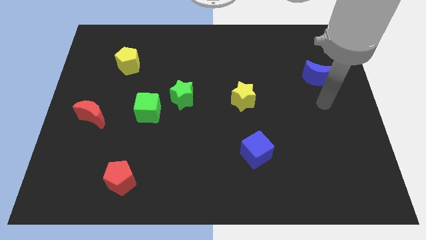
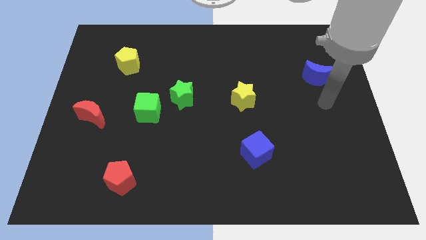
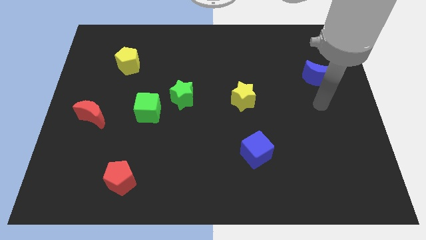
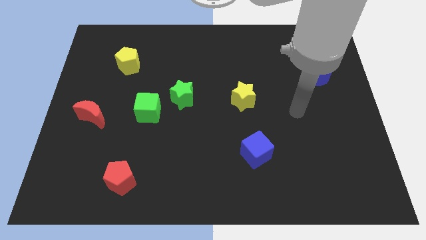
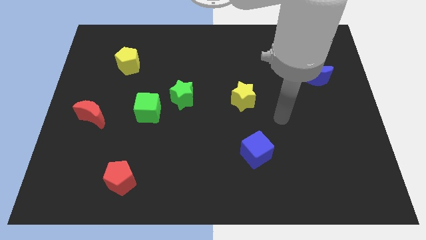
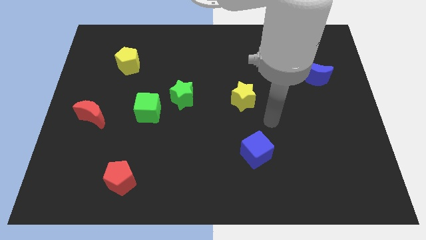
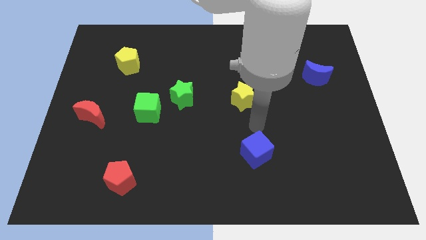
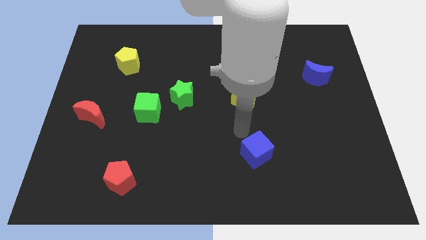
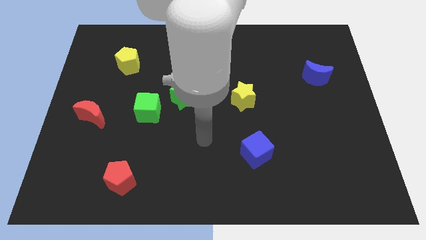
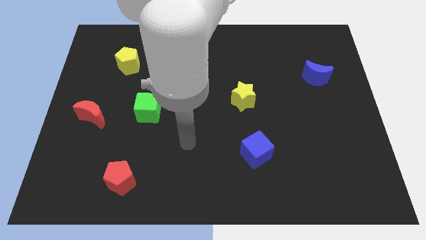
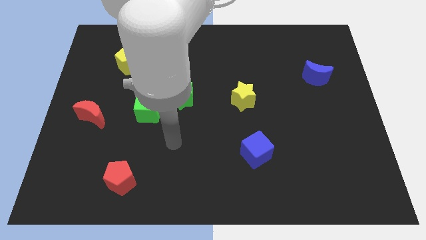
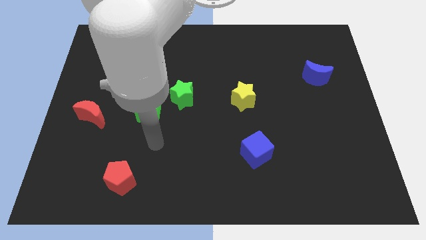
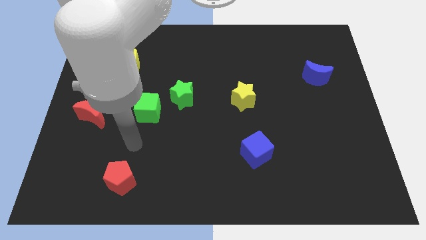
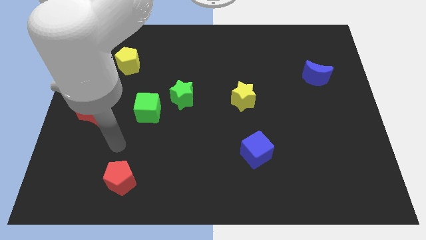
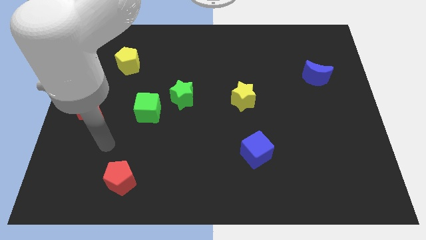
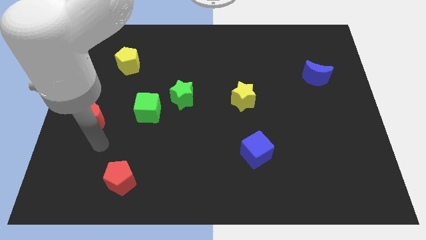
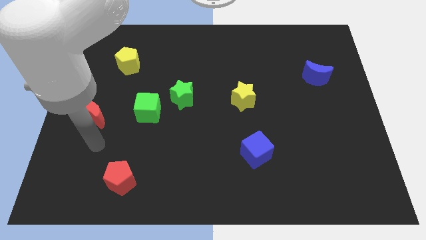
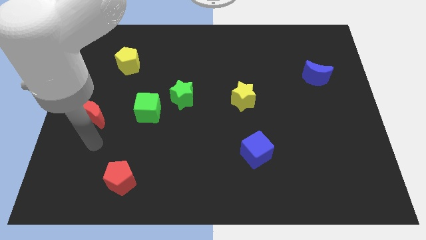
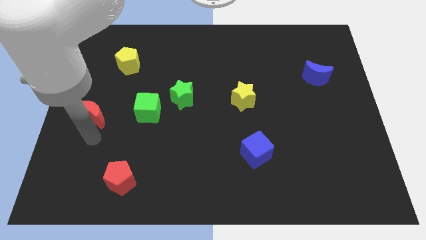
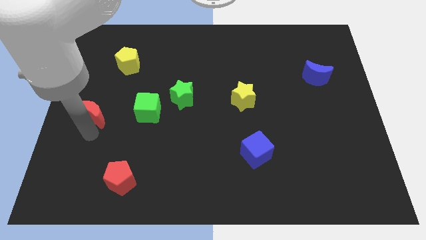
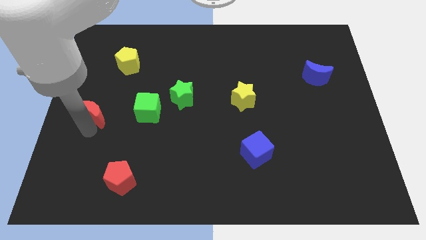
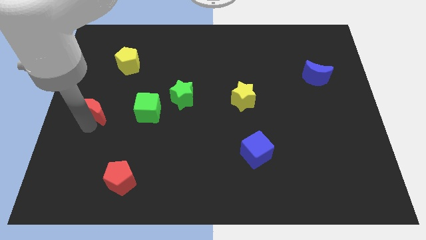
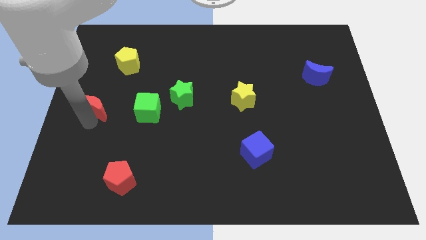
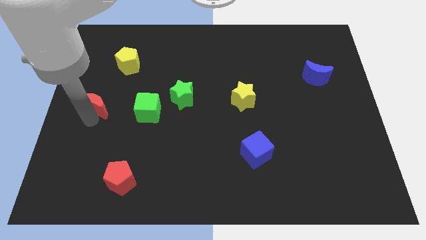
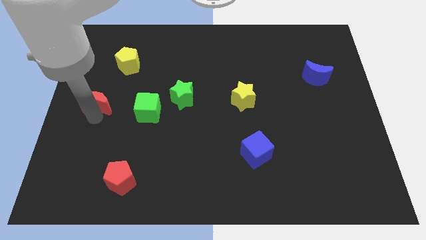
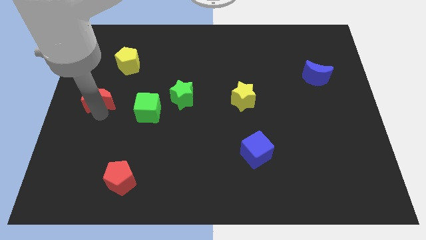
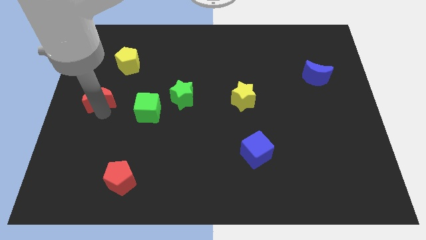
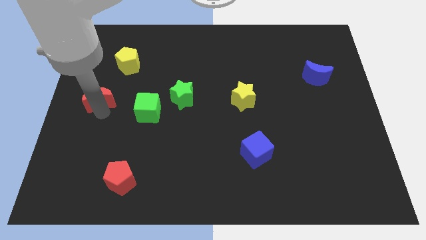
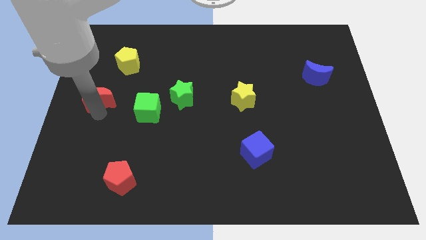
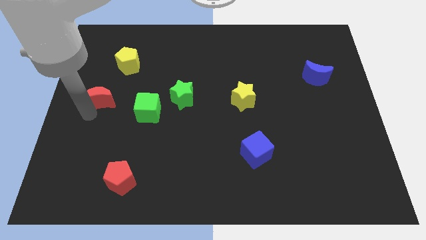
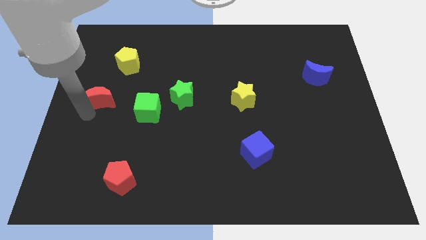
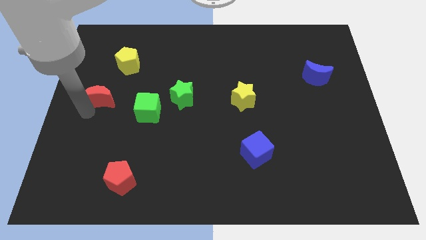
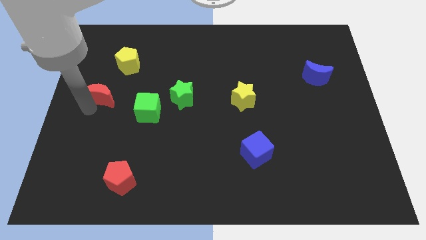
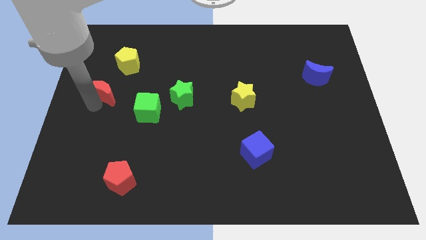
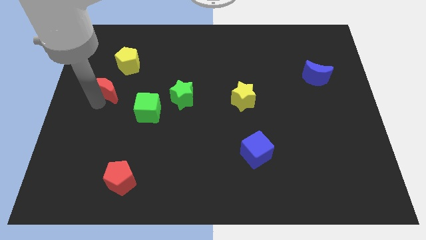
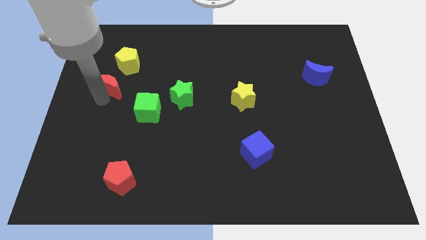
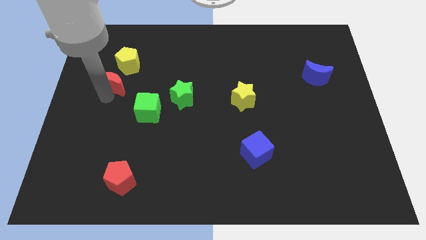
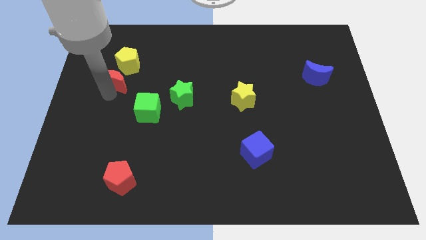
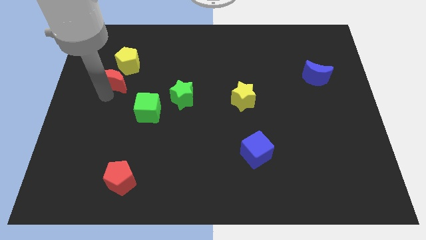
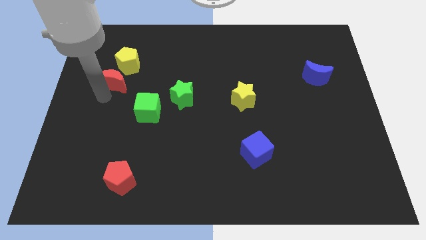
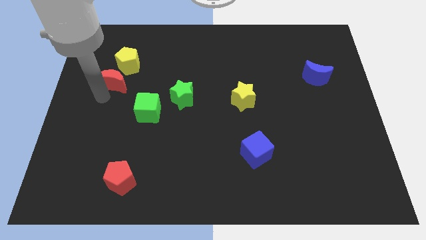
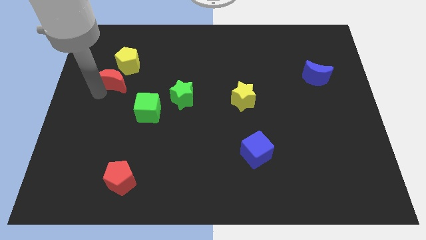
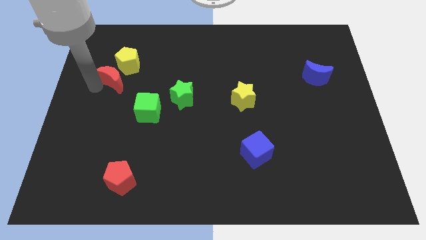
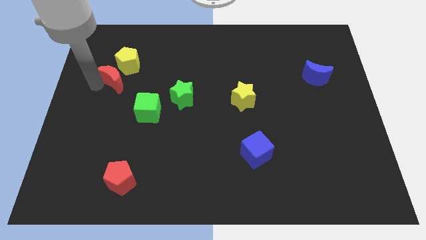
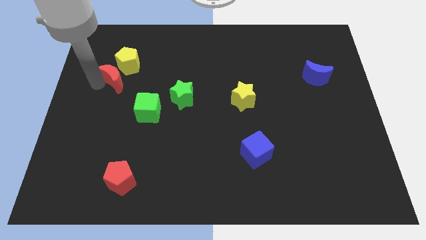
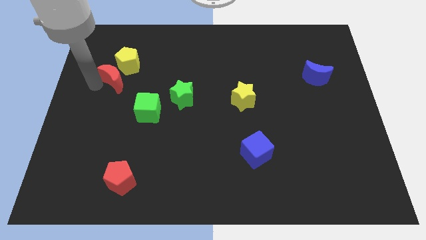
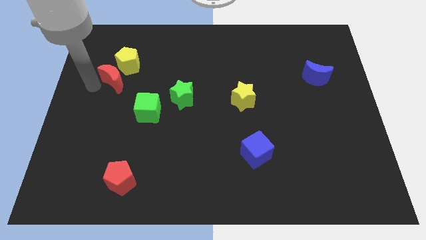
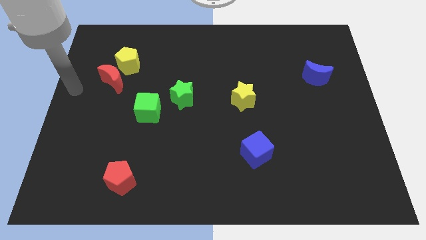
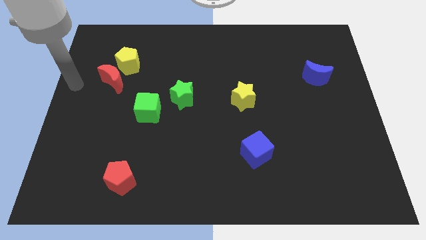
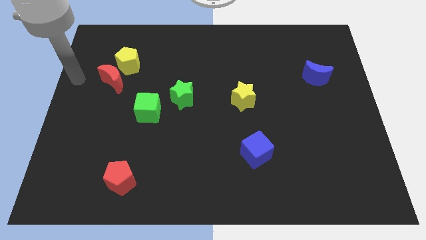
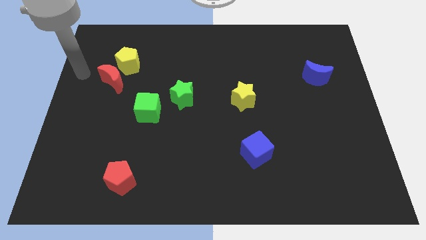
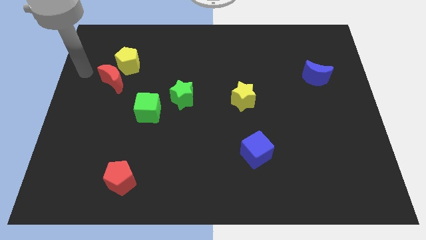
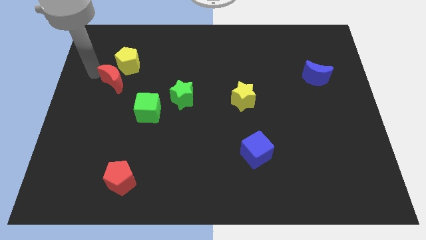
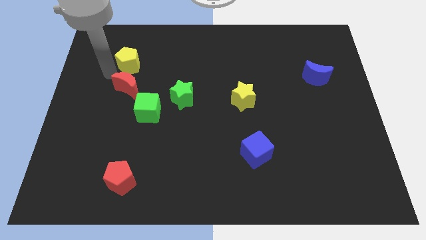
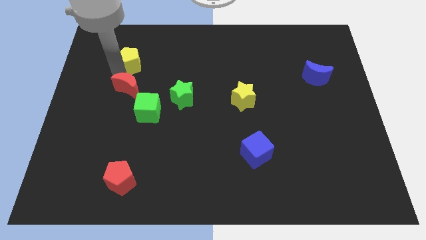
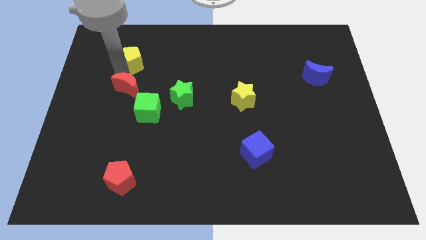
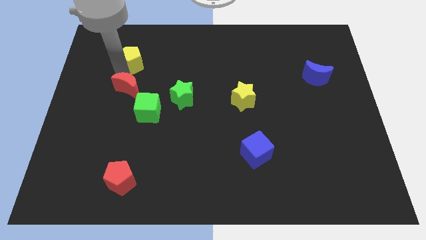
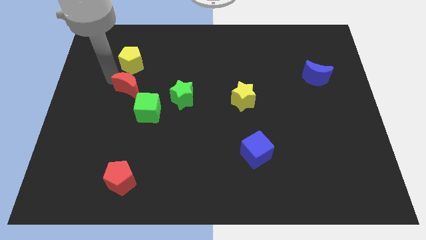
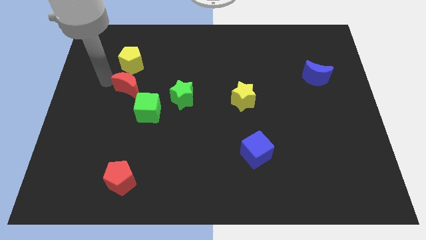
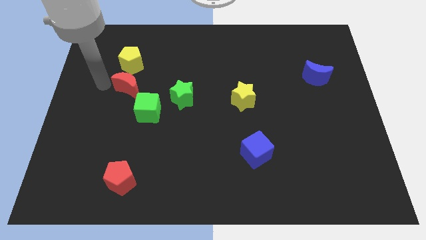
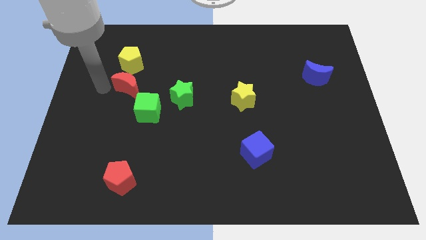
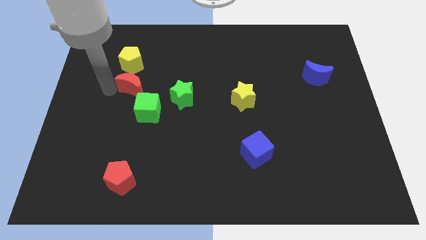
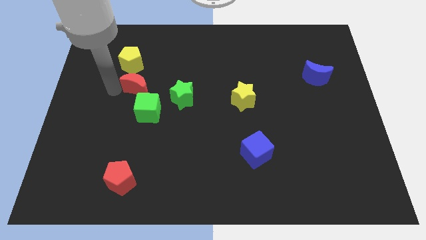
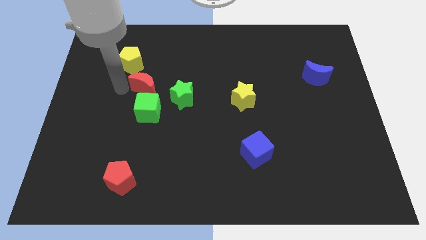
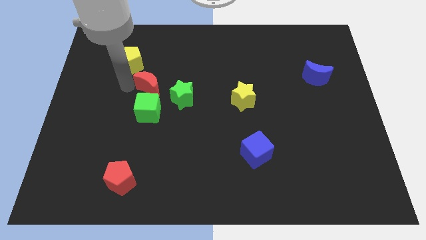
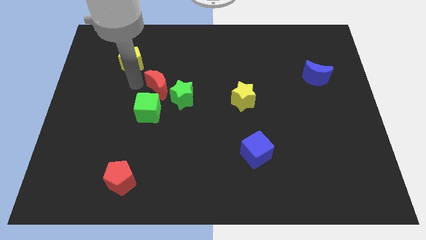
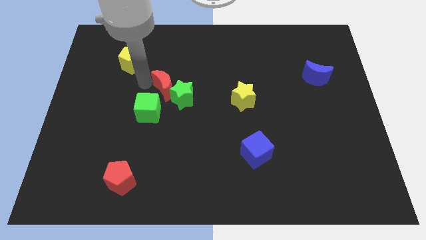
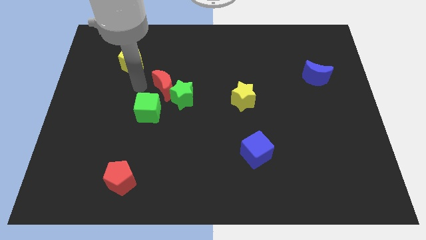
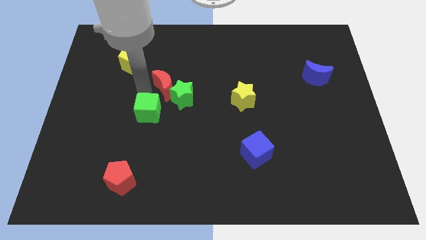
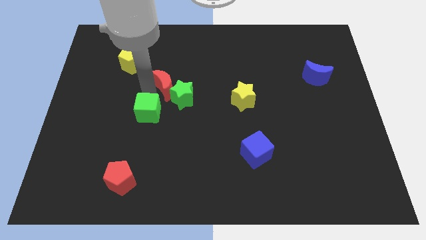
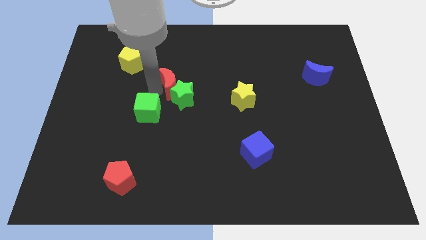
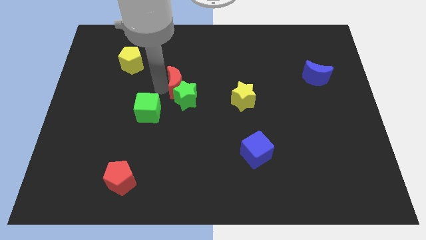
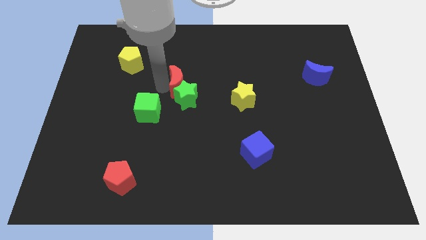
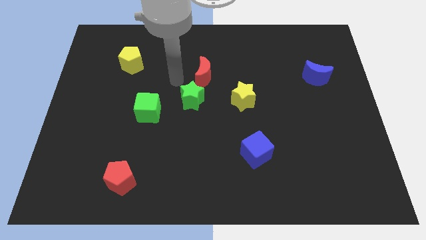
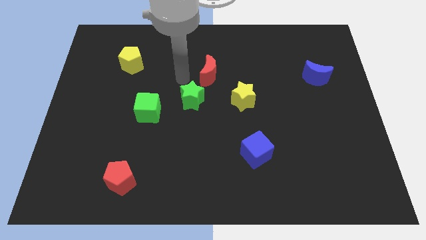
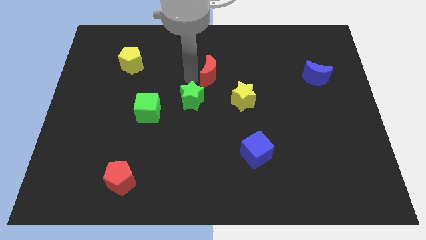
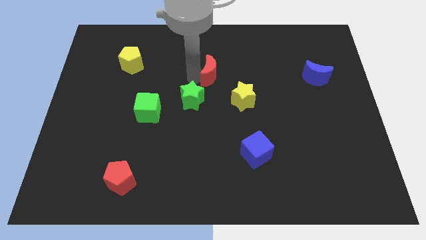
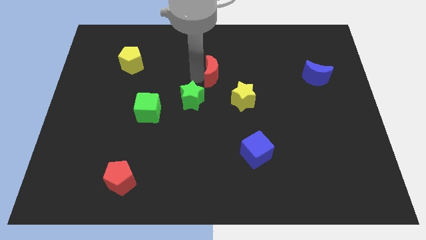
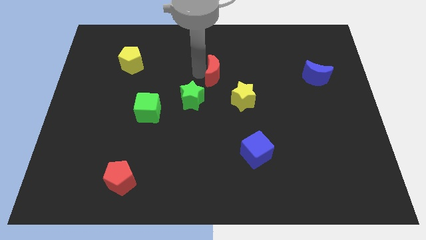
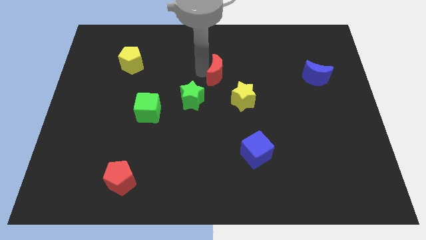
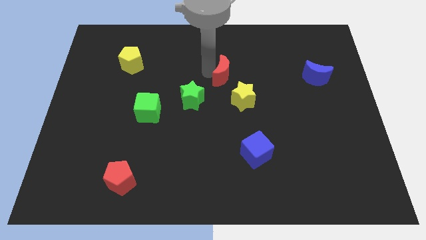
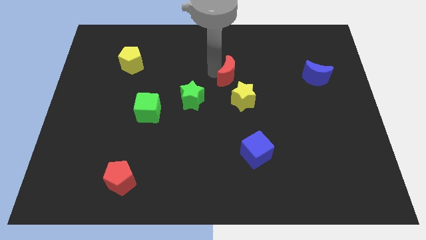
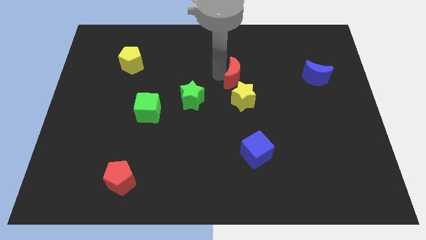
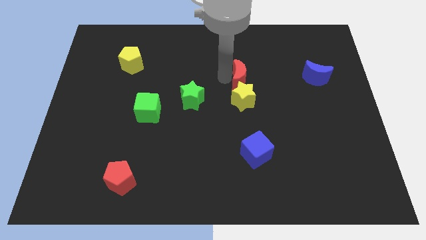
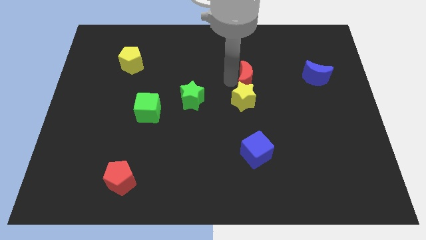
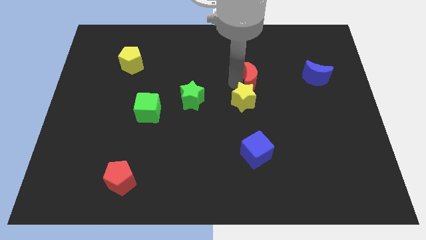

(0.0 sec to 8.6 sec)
slide the red moon next to the yellow star
